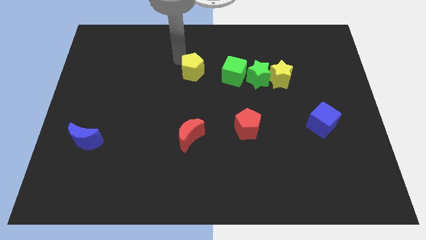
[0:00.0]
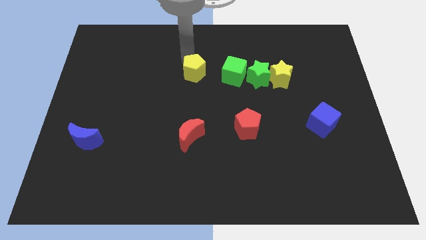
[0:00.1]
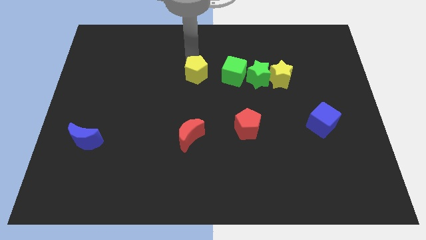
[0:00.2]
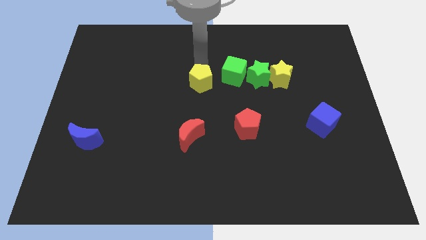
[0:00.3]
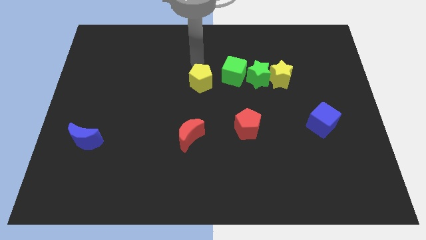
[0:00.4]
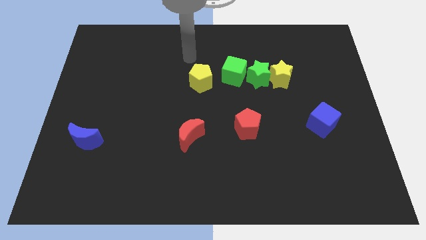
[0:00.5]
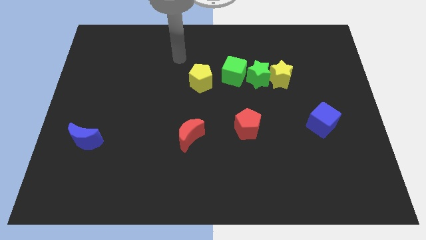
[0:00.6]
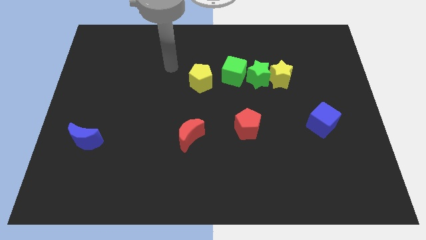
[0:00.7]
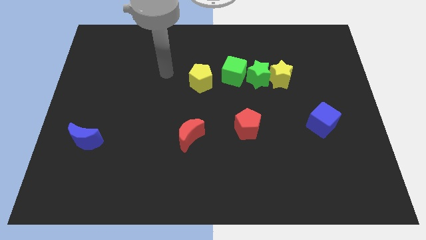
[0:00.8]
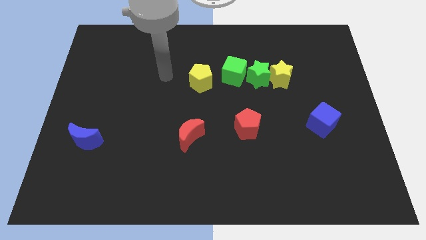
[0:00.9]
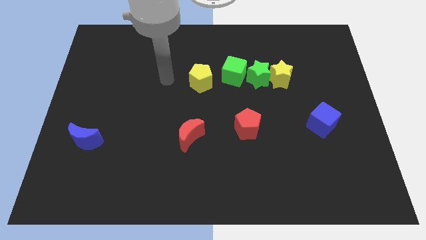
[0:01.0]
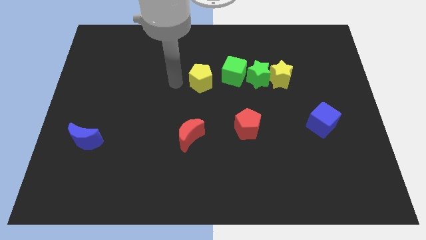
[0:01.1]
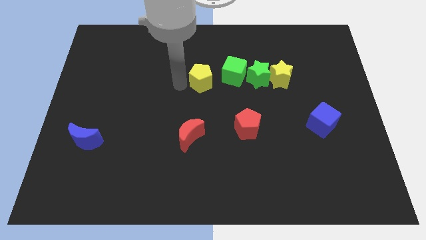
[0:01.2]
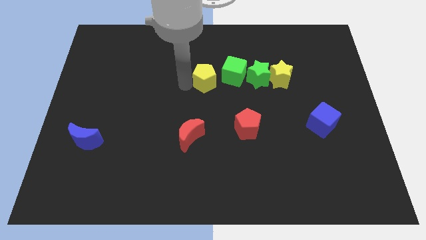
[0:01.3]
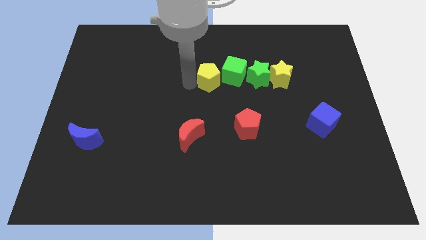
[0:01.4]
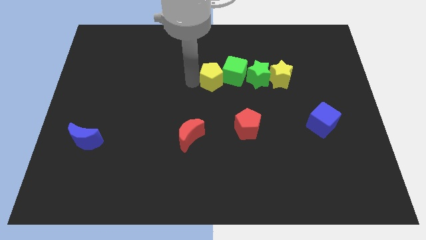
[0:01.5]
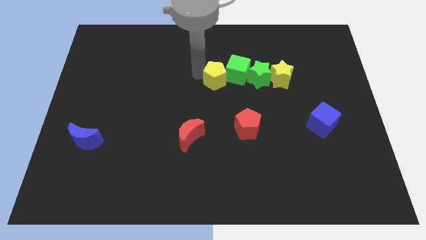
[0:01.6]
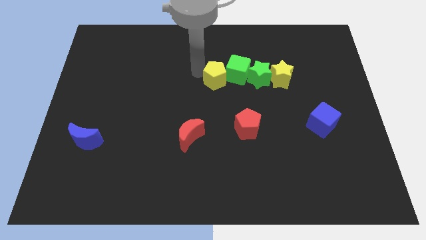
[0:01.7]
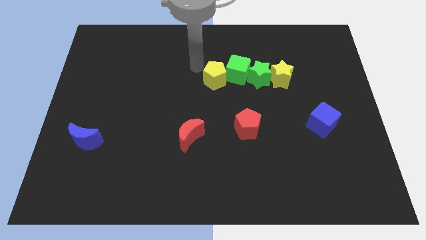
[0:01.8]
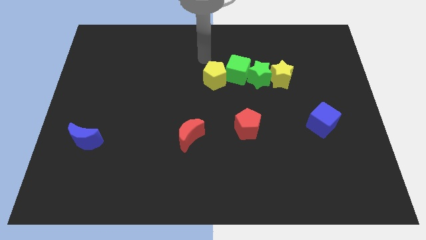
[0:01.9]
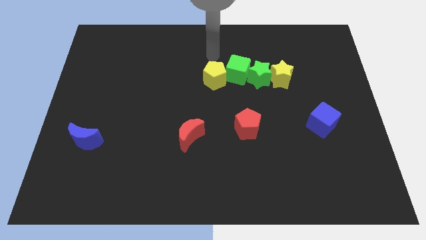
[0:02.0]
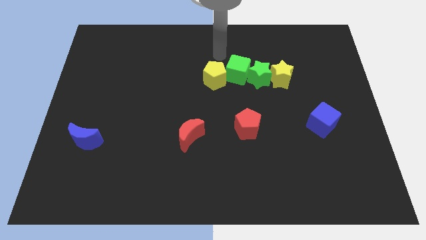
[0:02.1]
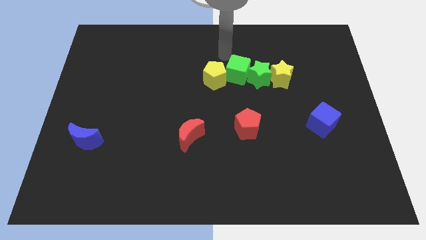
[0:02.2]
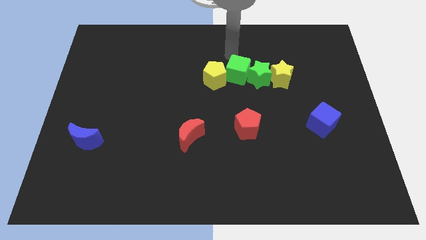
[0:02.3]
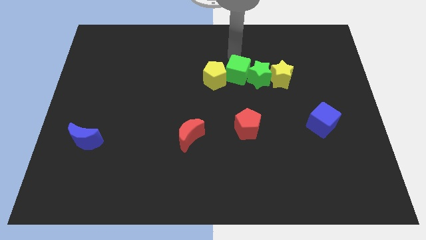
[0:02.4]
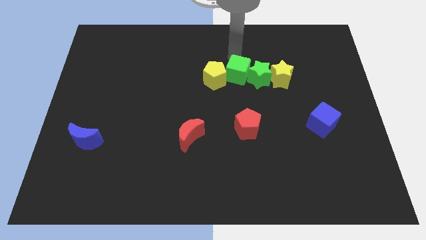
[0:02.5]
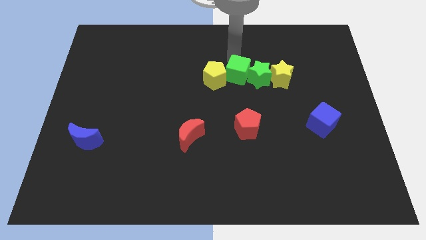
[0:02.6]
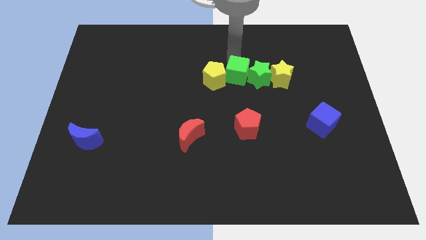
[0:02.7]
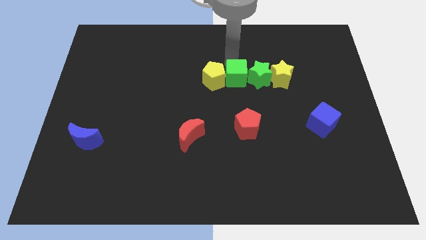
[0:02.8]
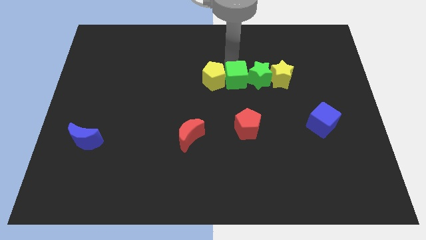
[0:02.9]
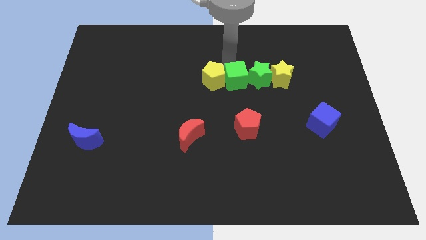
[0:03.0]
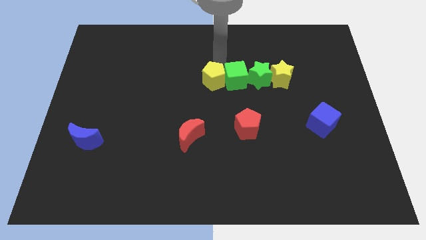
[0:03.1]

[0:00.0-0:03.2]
make the yellow pentagon to touch the left side of the green cube

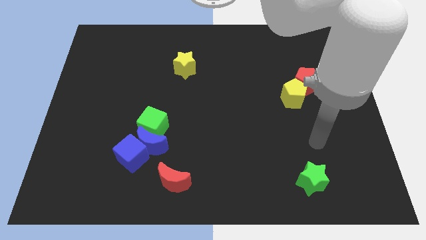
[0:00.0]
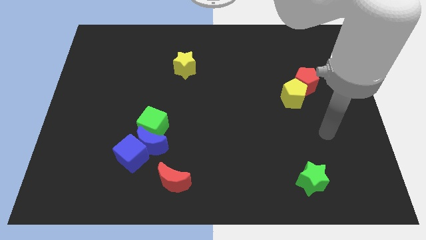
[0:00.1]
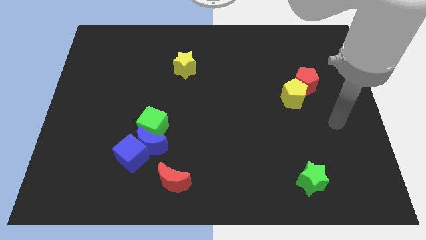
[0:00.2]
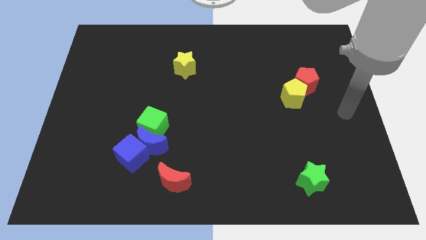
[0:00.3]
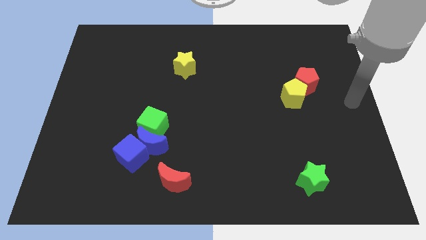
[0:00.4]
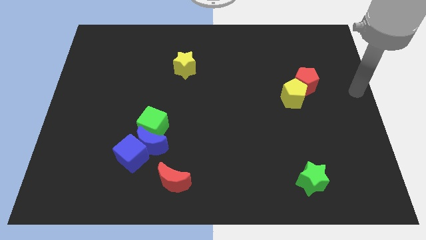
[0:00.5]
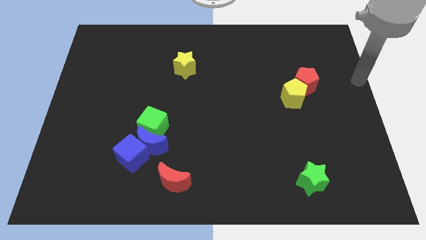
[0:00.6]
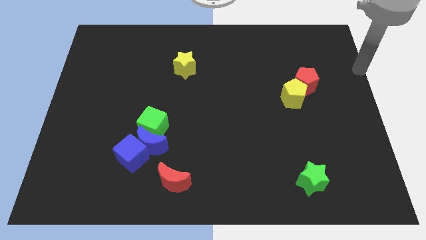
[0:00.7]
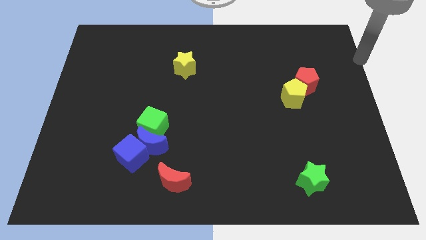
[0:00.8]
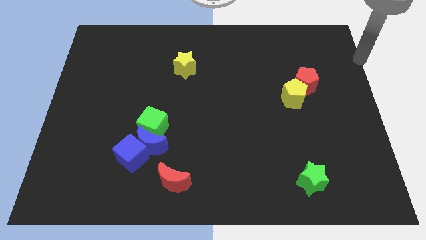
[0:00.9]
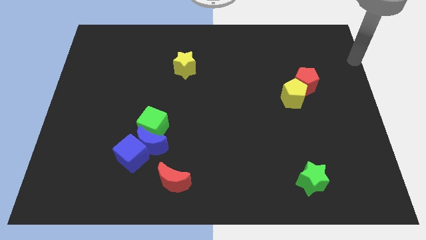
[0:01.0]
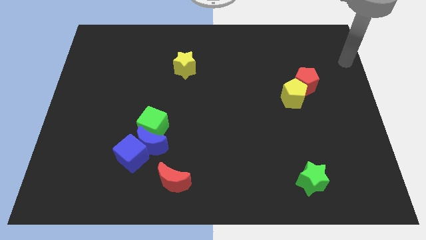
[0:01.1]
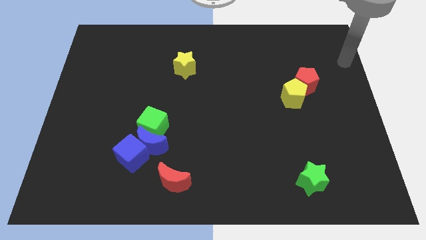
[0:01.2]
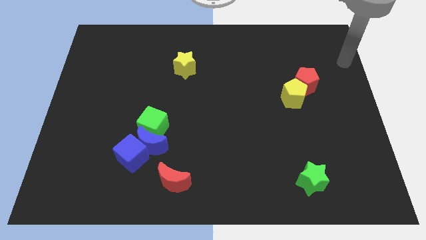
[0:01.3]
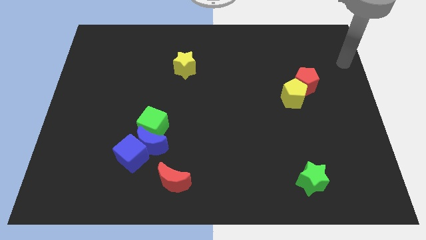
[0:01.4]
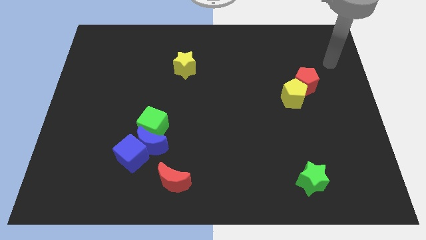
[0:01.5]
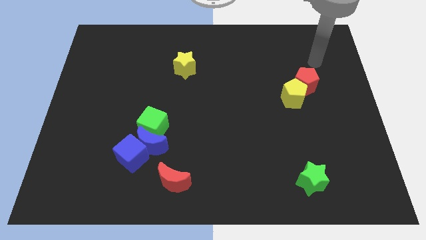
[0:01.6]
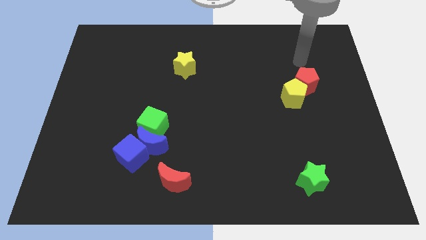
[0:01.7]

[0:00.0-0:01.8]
place your arm to the top of the red pentagon

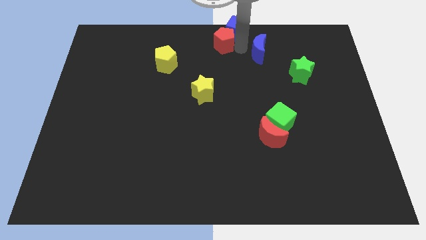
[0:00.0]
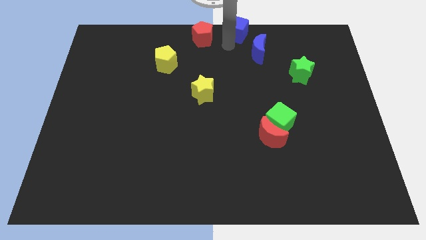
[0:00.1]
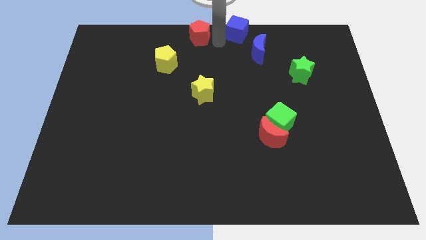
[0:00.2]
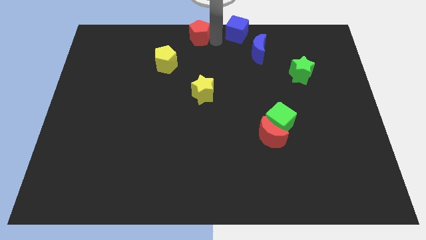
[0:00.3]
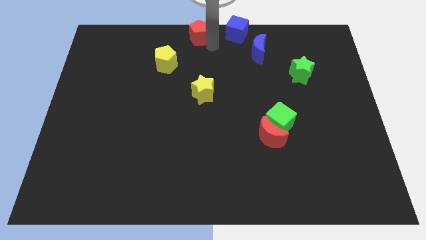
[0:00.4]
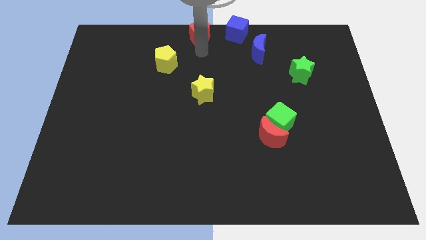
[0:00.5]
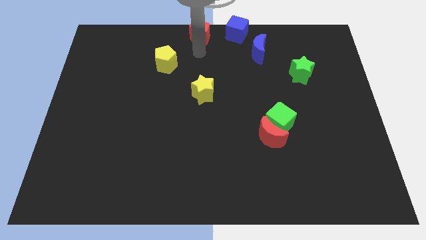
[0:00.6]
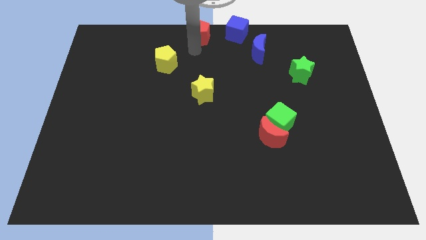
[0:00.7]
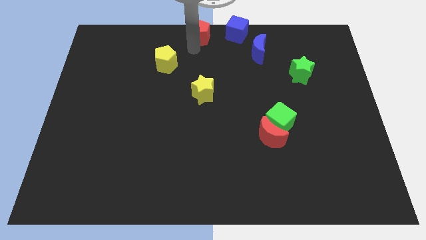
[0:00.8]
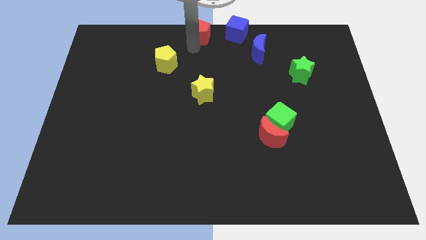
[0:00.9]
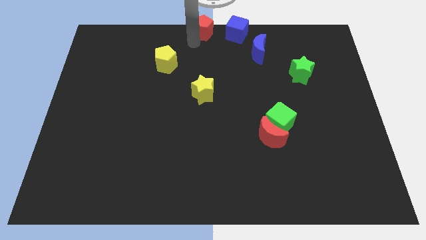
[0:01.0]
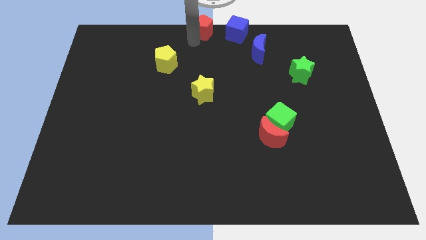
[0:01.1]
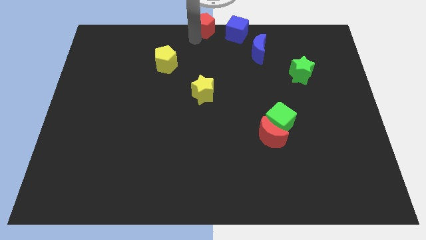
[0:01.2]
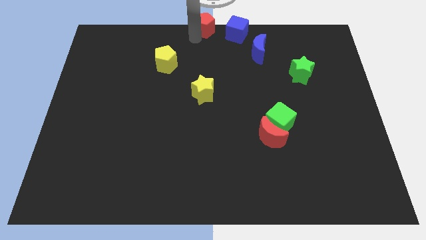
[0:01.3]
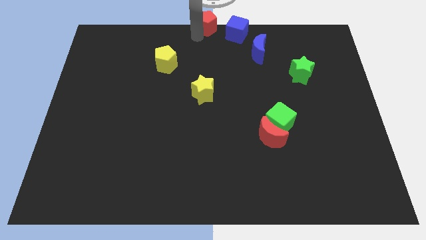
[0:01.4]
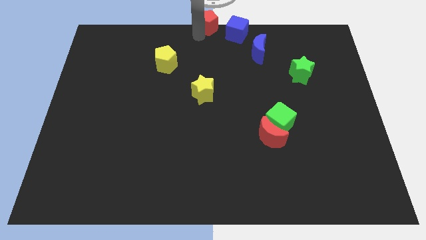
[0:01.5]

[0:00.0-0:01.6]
move the red pentagon to the left of the blue cube

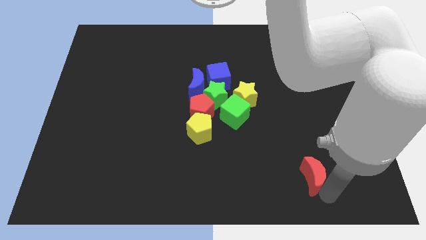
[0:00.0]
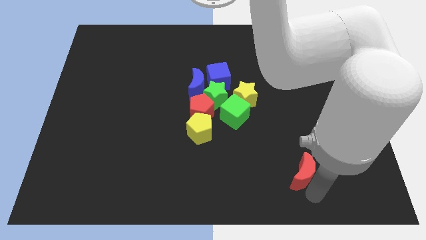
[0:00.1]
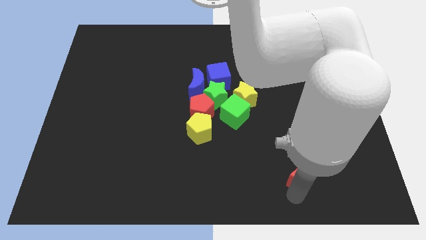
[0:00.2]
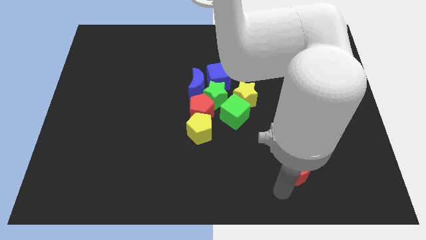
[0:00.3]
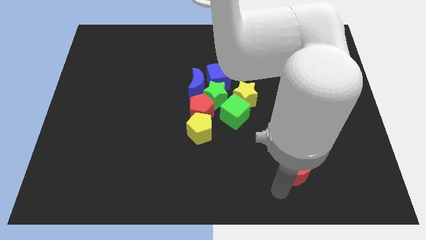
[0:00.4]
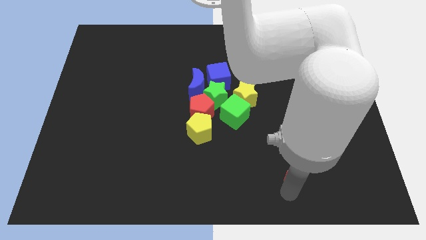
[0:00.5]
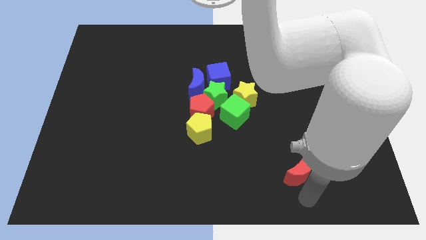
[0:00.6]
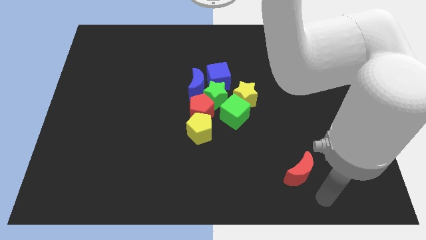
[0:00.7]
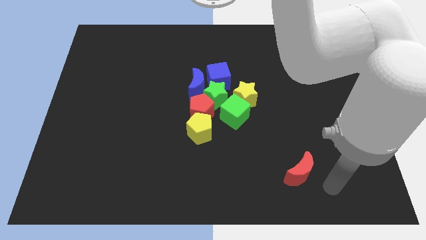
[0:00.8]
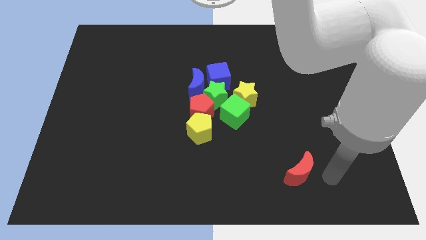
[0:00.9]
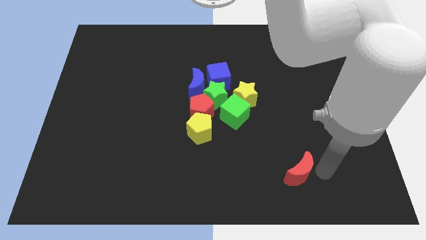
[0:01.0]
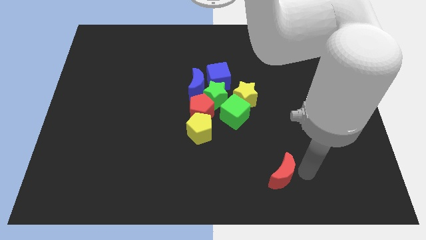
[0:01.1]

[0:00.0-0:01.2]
slightly push the red moon towards the bottom center

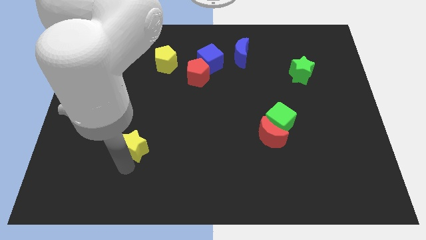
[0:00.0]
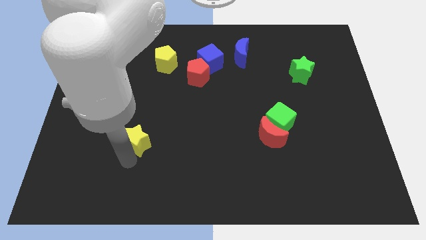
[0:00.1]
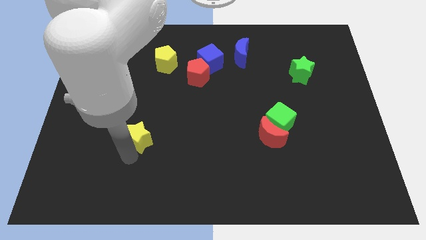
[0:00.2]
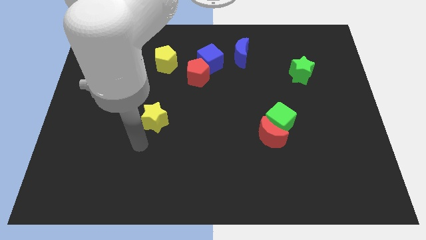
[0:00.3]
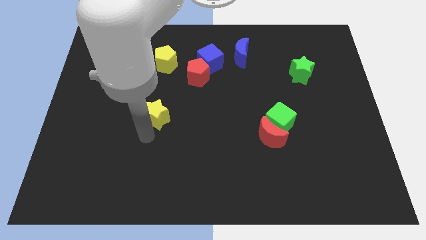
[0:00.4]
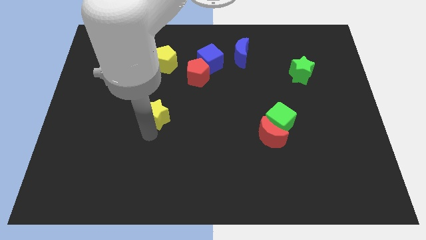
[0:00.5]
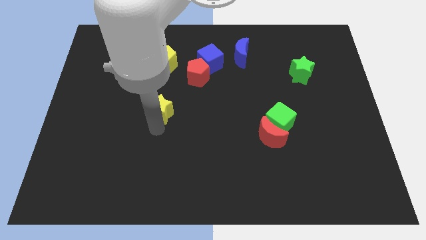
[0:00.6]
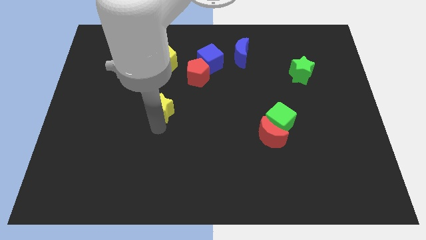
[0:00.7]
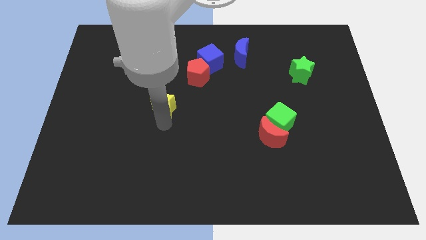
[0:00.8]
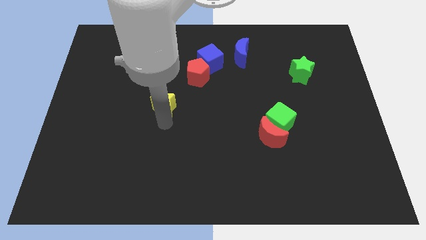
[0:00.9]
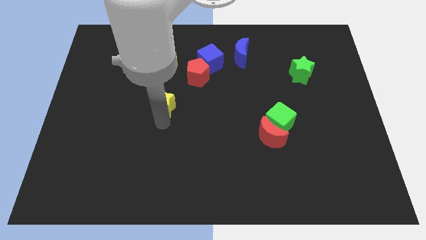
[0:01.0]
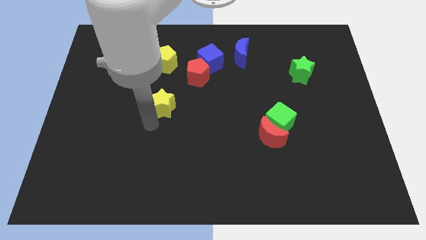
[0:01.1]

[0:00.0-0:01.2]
move the yellow star to the bottom left of the red pentagon
